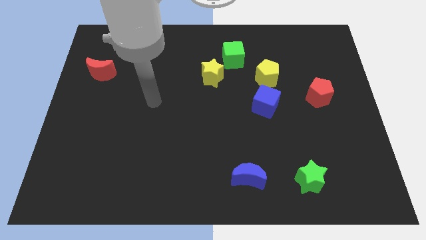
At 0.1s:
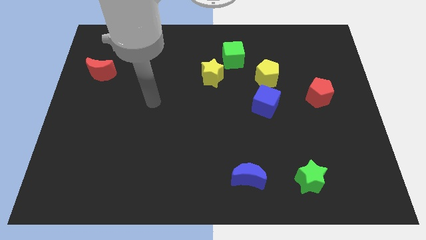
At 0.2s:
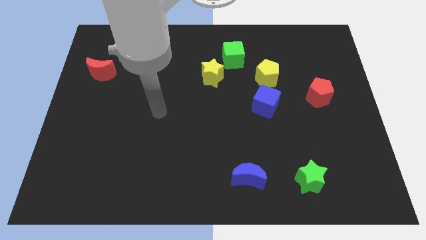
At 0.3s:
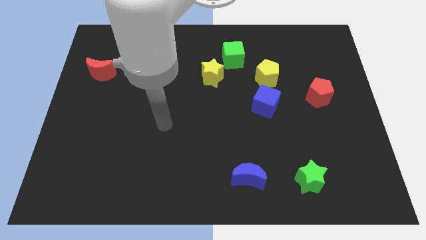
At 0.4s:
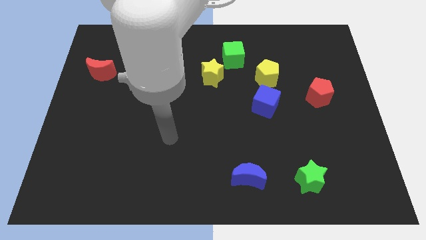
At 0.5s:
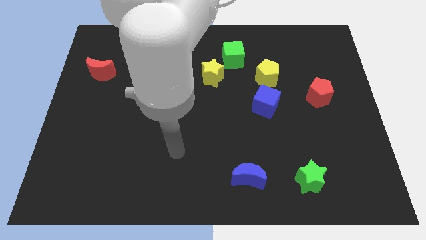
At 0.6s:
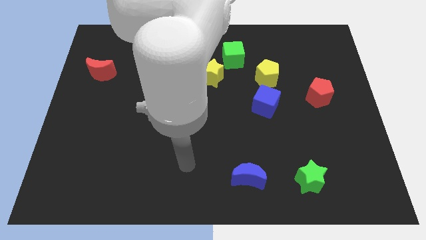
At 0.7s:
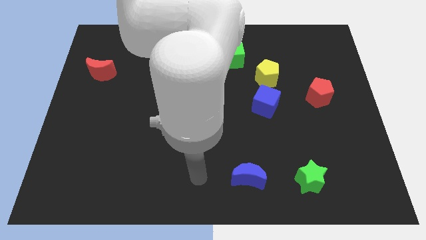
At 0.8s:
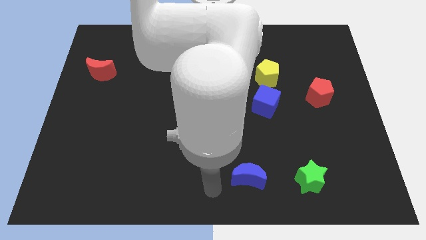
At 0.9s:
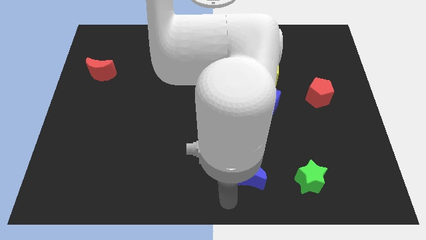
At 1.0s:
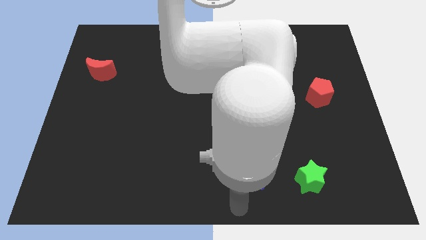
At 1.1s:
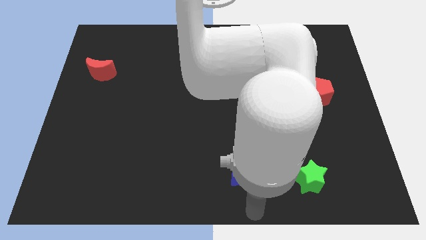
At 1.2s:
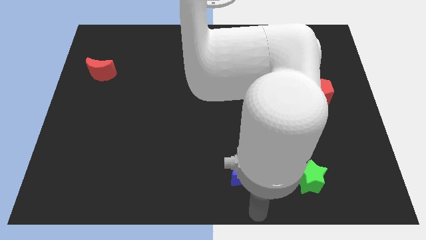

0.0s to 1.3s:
go to the bottom side of the blue crescent

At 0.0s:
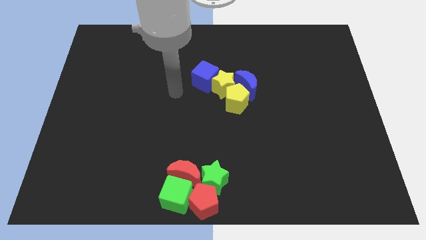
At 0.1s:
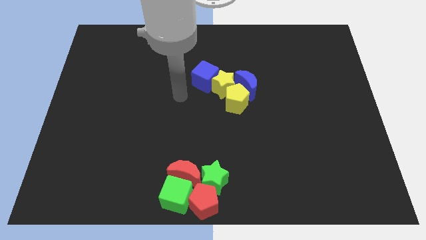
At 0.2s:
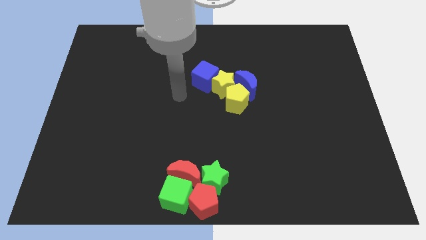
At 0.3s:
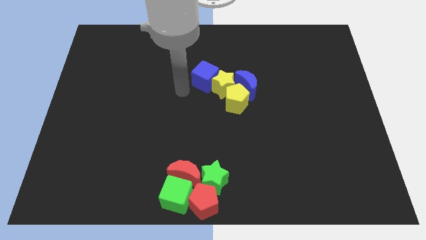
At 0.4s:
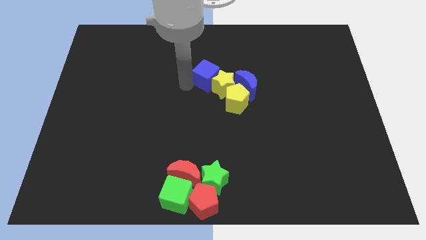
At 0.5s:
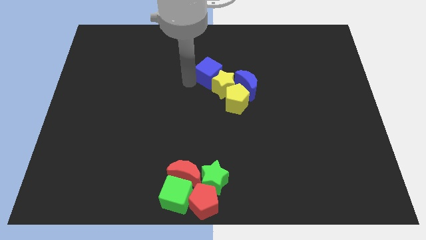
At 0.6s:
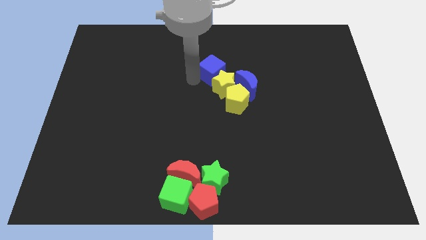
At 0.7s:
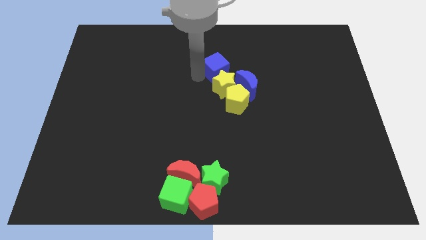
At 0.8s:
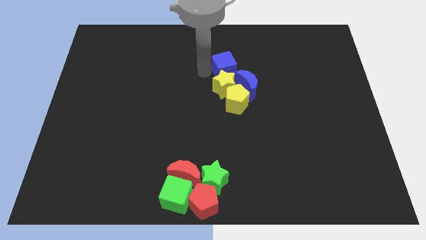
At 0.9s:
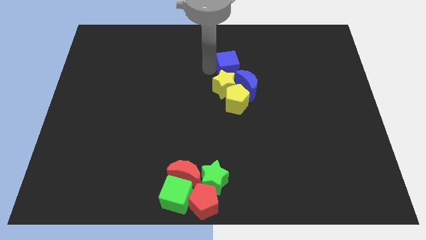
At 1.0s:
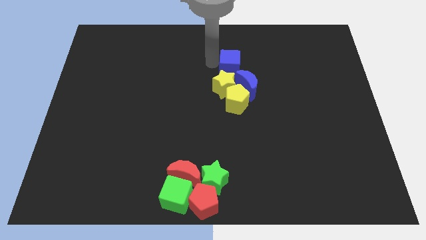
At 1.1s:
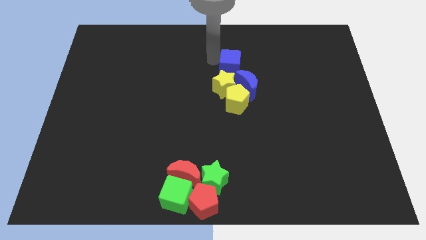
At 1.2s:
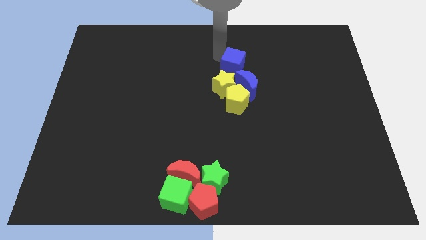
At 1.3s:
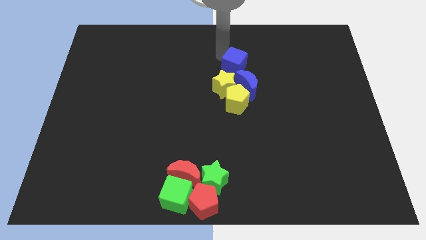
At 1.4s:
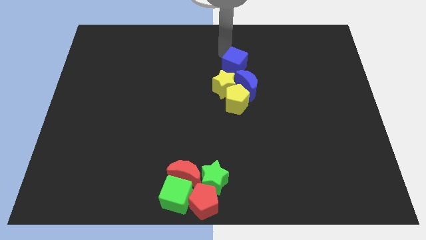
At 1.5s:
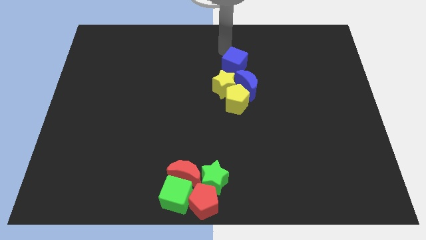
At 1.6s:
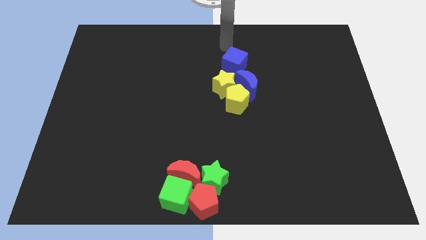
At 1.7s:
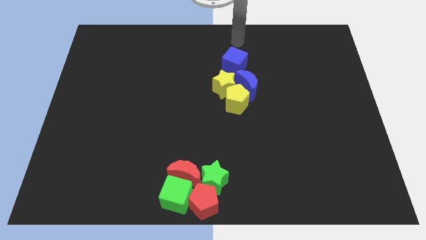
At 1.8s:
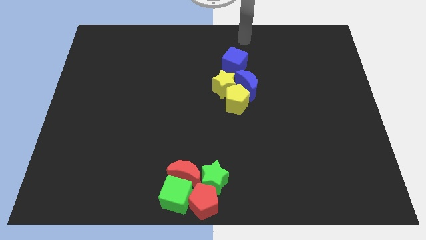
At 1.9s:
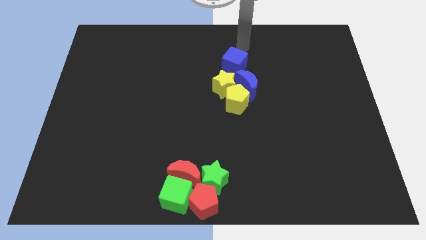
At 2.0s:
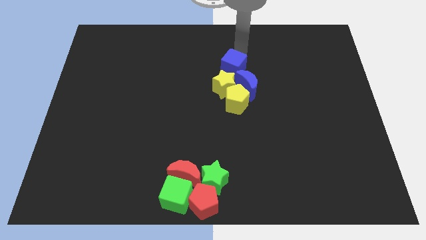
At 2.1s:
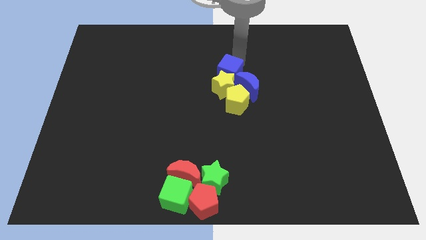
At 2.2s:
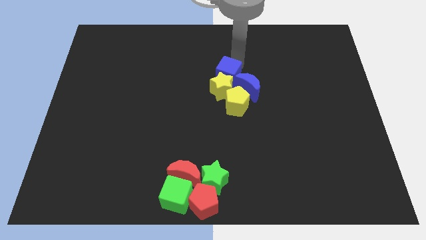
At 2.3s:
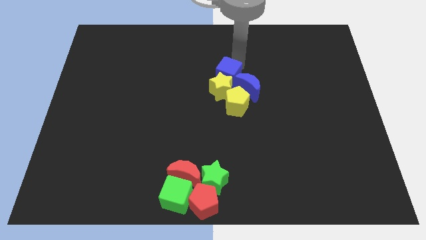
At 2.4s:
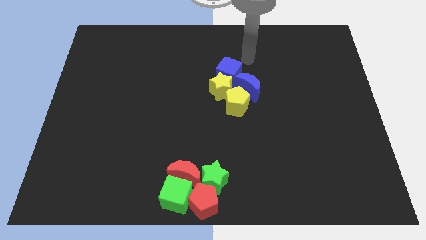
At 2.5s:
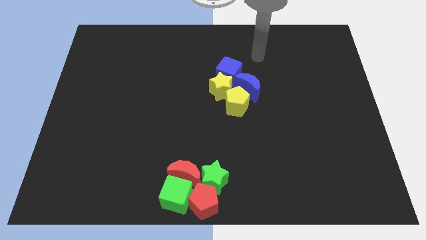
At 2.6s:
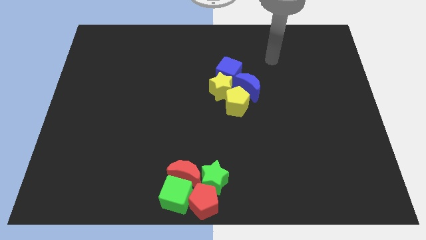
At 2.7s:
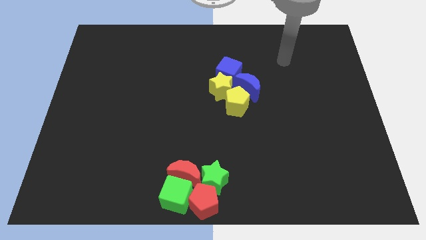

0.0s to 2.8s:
push the blue cube into the group of yellow and blue blocks

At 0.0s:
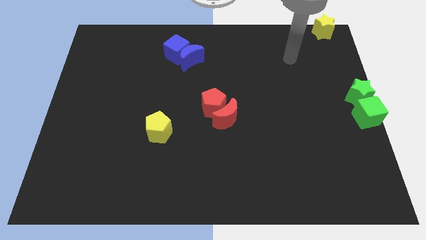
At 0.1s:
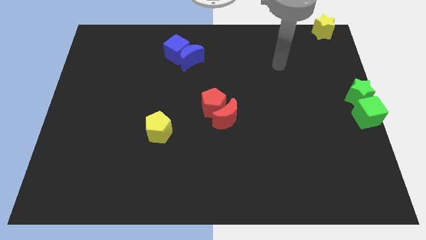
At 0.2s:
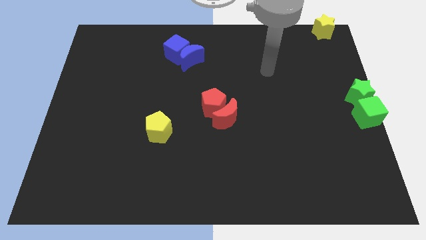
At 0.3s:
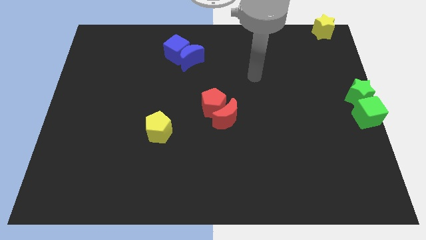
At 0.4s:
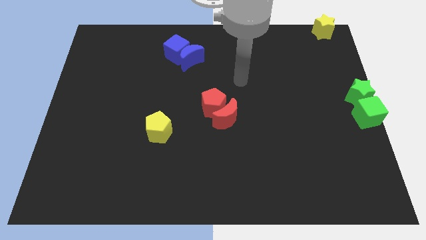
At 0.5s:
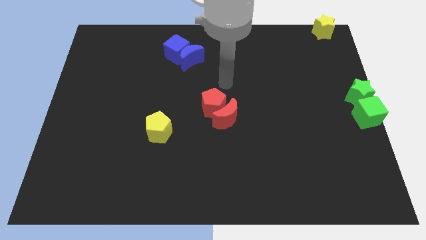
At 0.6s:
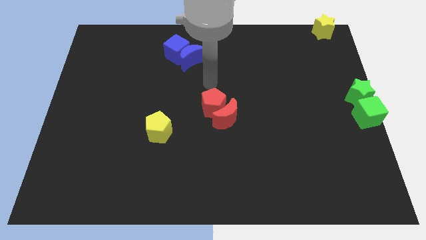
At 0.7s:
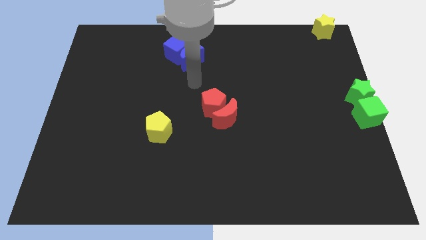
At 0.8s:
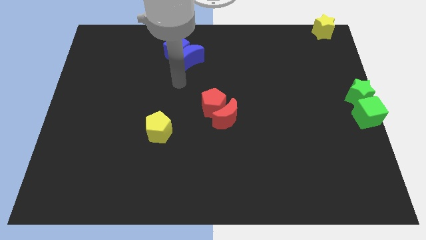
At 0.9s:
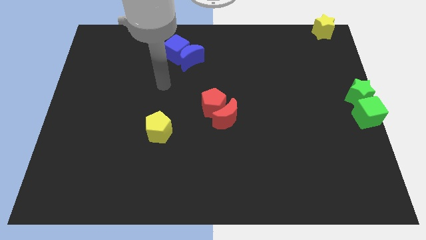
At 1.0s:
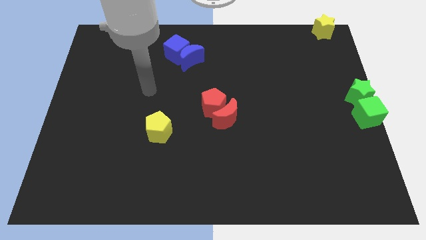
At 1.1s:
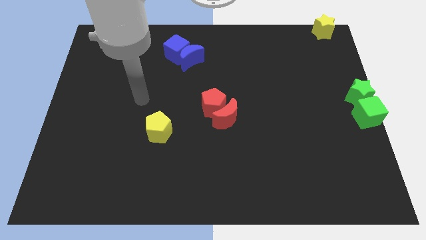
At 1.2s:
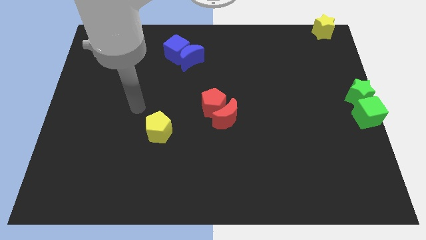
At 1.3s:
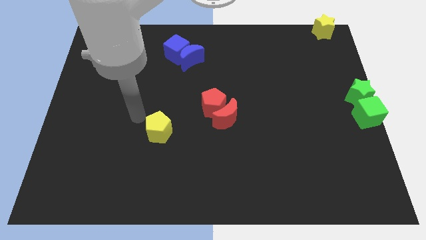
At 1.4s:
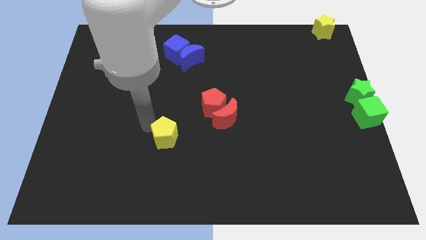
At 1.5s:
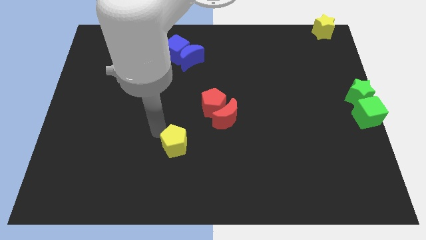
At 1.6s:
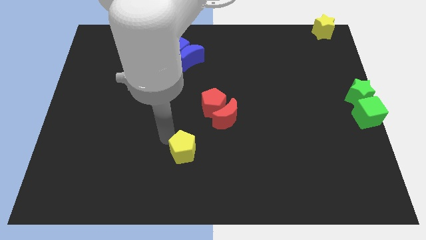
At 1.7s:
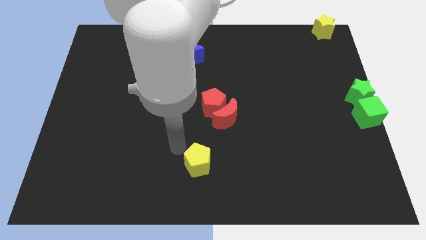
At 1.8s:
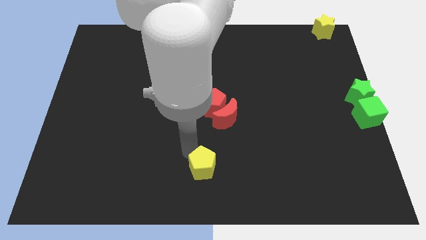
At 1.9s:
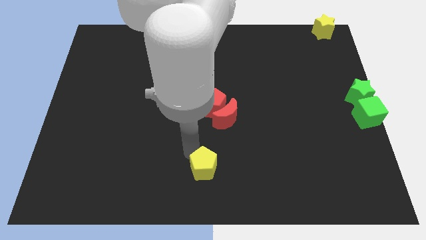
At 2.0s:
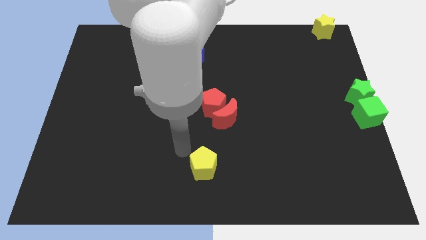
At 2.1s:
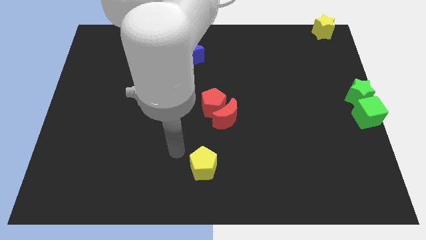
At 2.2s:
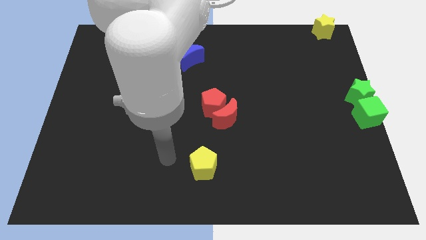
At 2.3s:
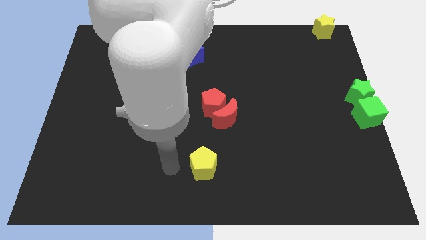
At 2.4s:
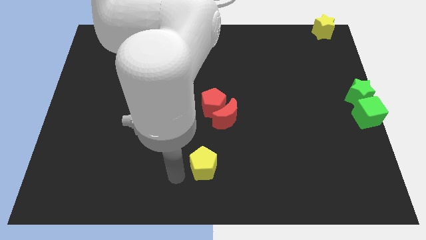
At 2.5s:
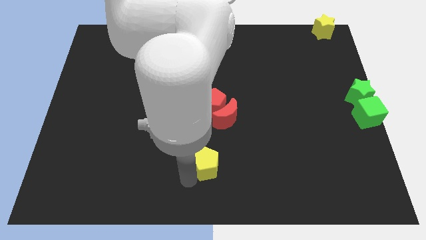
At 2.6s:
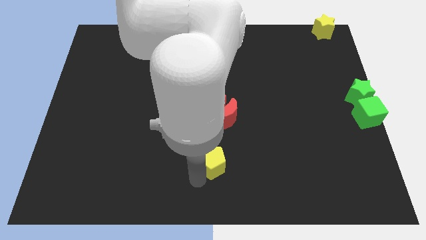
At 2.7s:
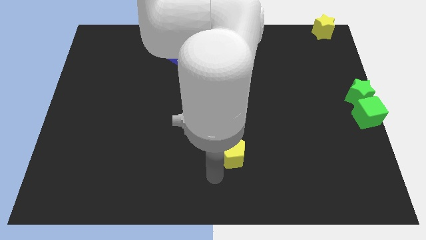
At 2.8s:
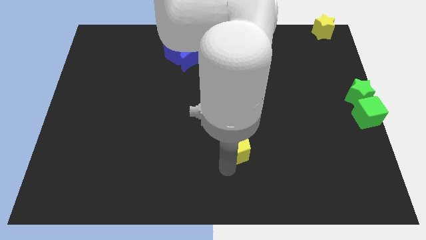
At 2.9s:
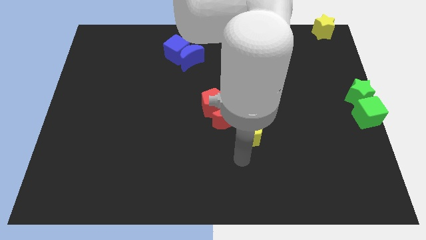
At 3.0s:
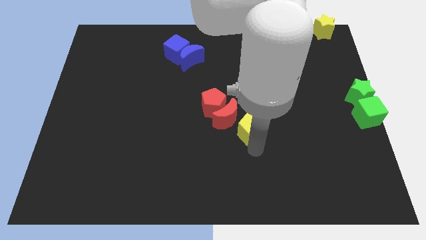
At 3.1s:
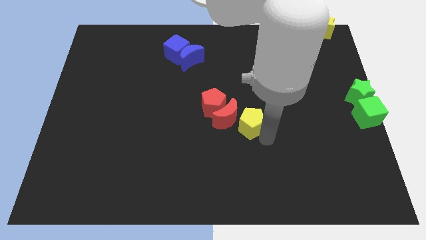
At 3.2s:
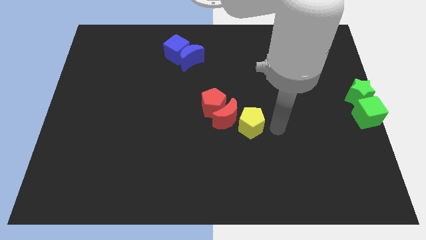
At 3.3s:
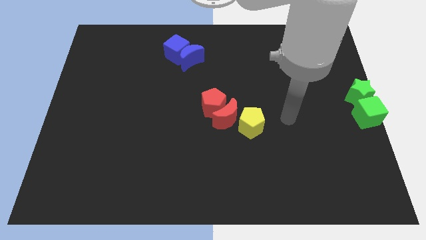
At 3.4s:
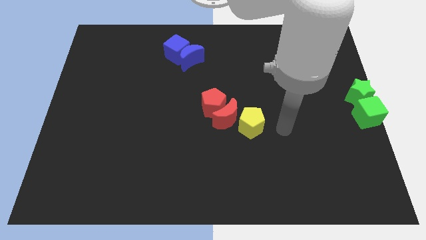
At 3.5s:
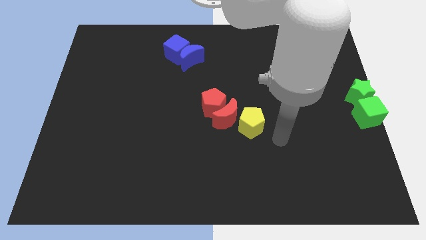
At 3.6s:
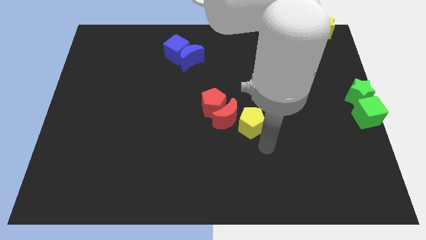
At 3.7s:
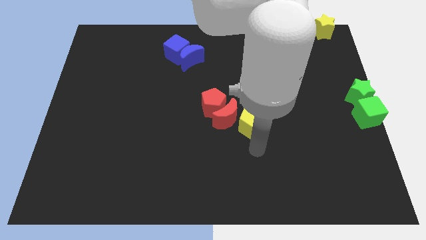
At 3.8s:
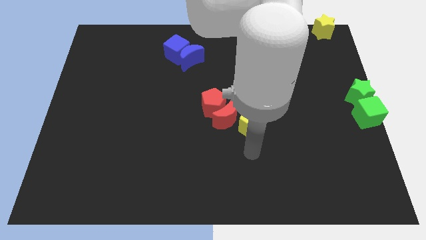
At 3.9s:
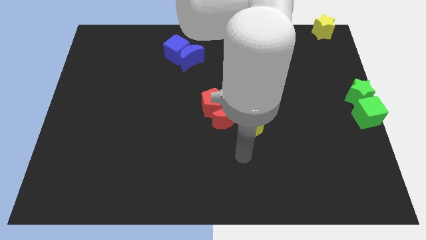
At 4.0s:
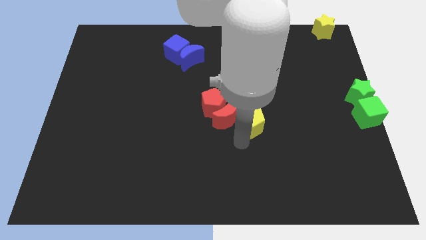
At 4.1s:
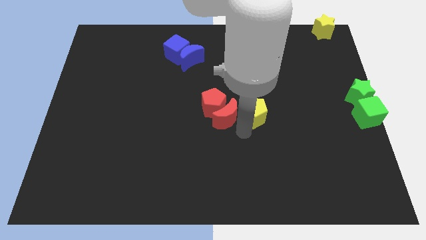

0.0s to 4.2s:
put the yellow pentagon to the right side of the red crescent

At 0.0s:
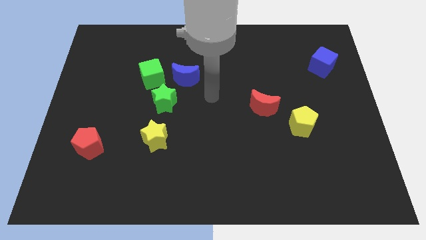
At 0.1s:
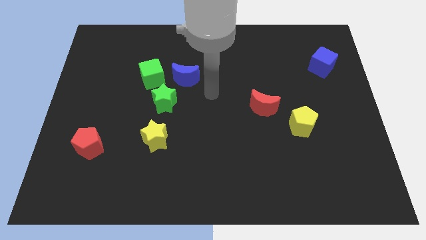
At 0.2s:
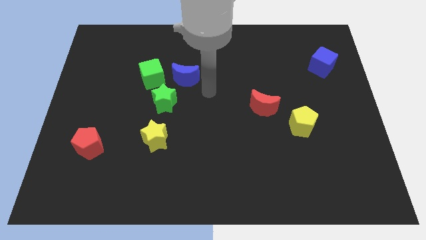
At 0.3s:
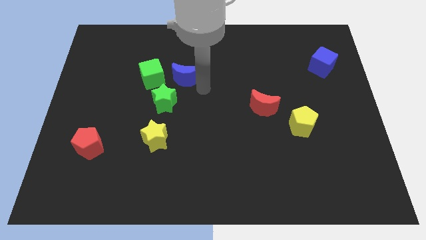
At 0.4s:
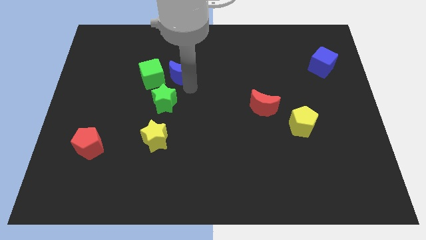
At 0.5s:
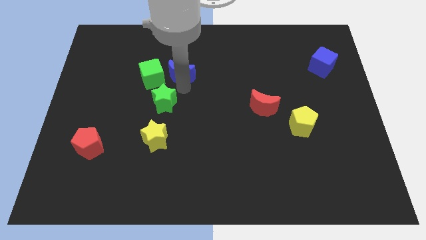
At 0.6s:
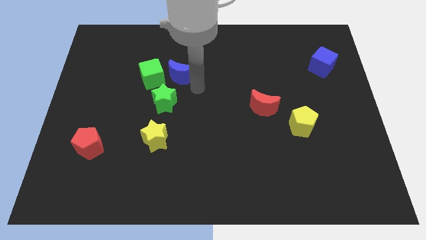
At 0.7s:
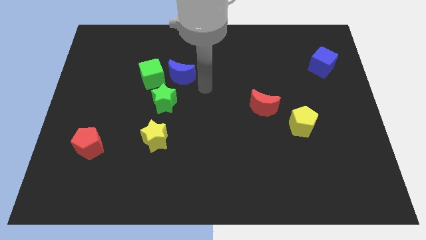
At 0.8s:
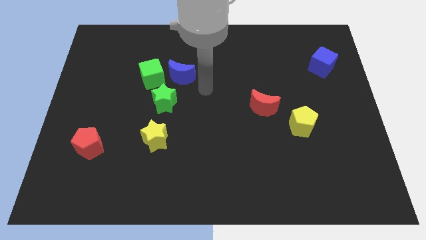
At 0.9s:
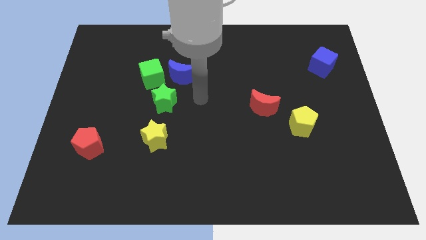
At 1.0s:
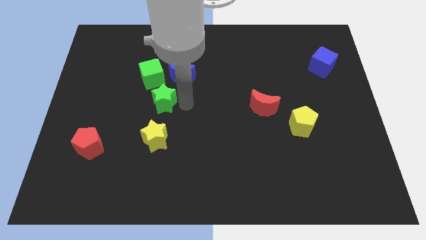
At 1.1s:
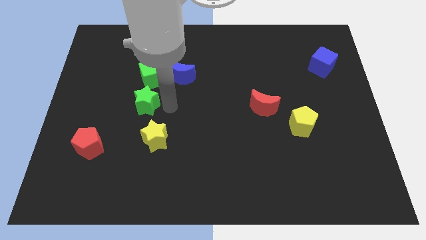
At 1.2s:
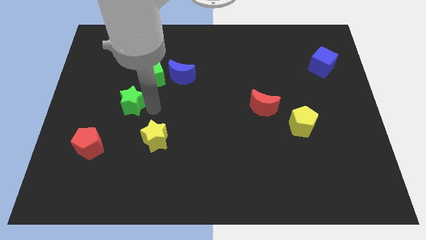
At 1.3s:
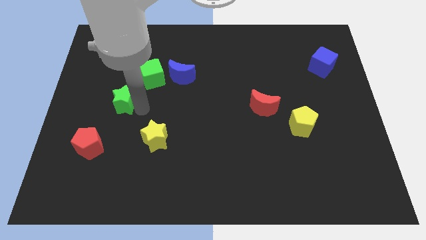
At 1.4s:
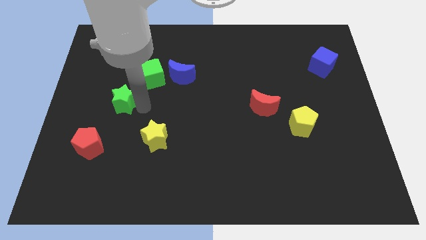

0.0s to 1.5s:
push the green star towards the center left side of the board
